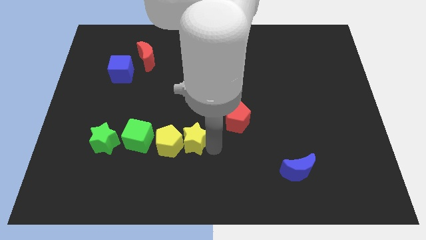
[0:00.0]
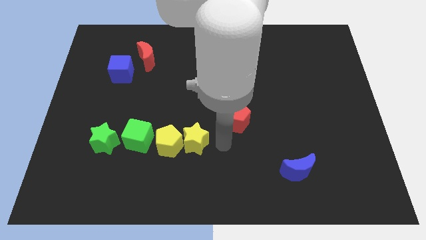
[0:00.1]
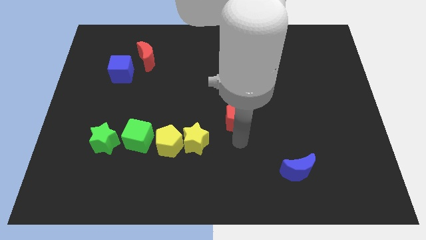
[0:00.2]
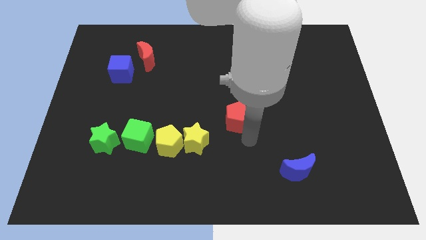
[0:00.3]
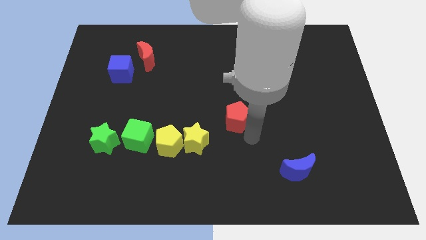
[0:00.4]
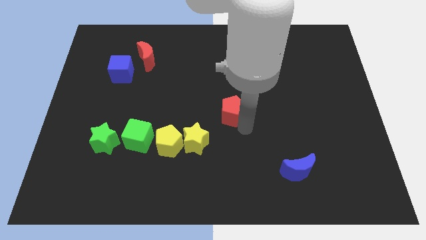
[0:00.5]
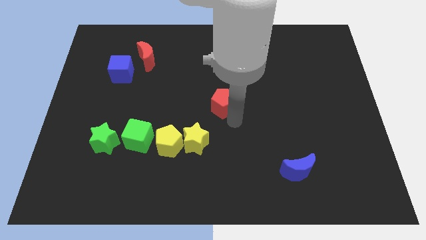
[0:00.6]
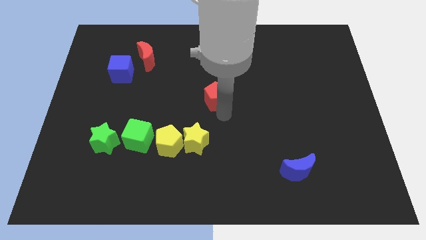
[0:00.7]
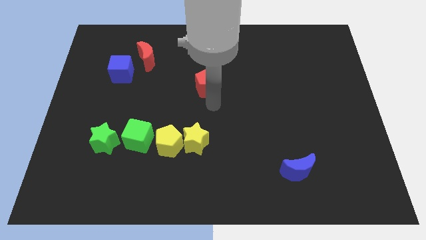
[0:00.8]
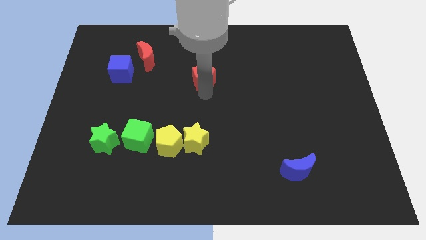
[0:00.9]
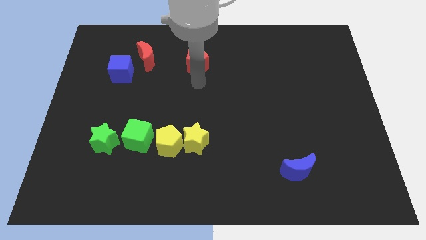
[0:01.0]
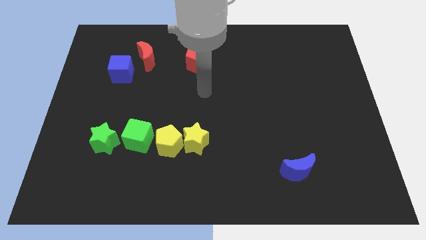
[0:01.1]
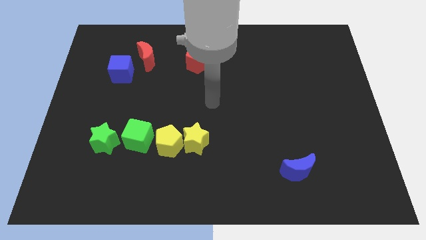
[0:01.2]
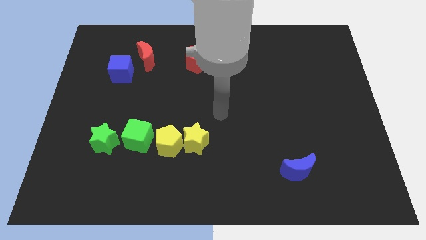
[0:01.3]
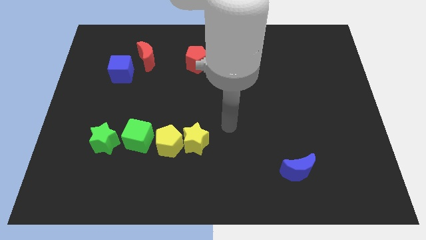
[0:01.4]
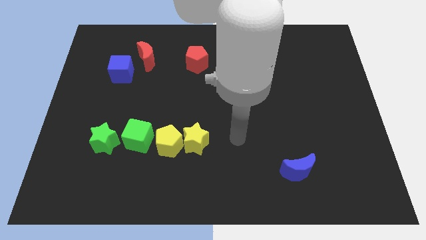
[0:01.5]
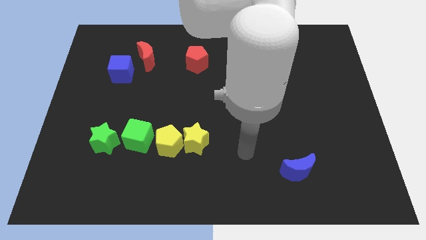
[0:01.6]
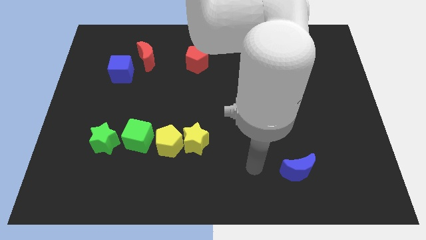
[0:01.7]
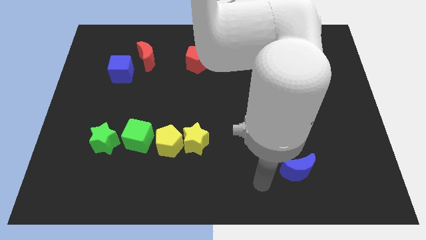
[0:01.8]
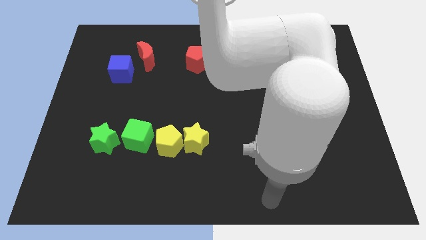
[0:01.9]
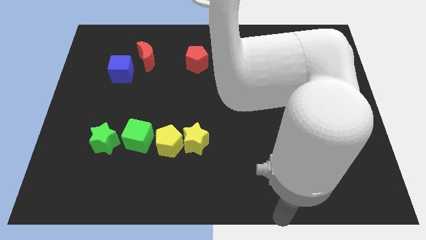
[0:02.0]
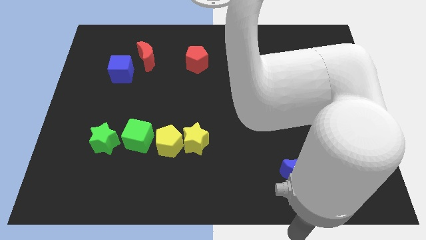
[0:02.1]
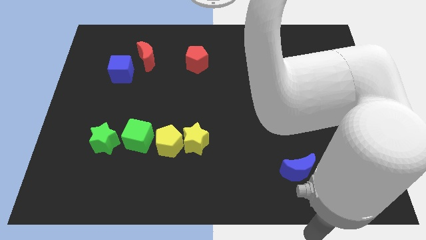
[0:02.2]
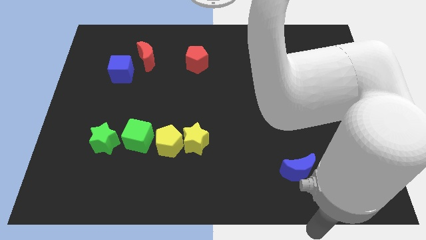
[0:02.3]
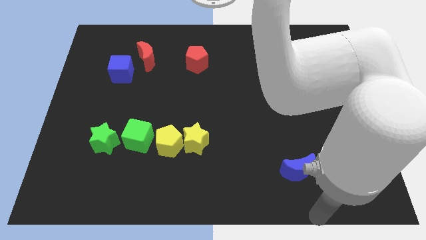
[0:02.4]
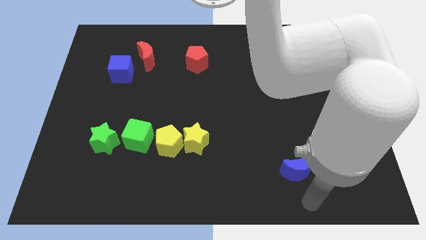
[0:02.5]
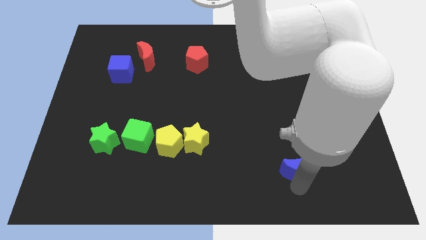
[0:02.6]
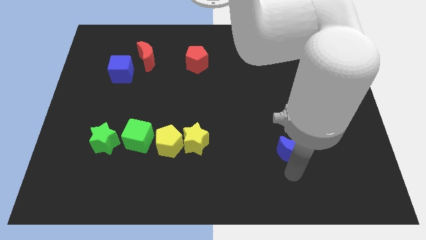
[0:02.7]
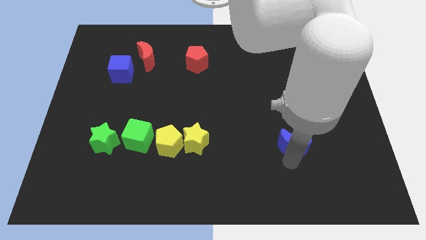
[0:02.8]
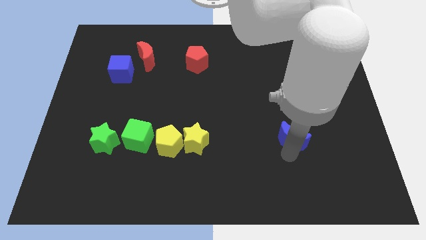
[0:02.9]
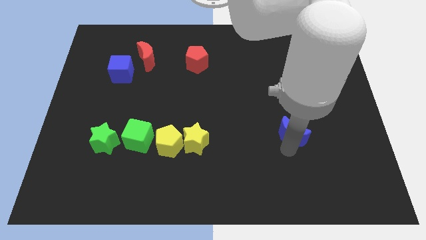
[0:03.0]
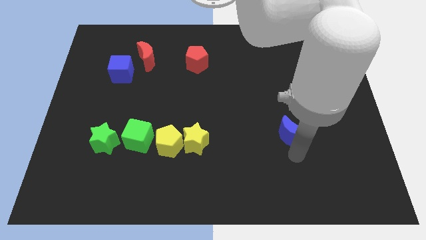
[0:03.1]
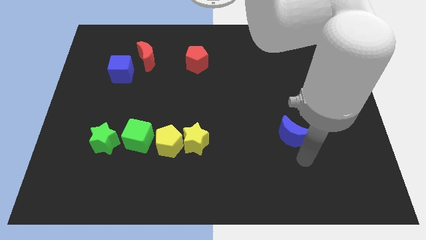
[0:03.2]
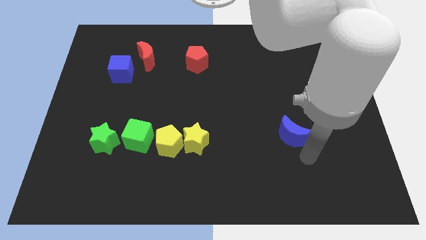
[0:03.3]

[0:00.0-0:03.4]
place the red pentagon and blue moon in a diagonal line

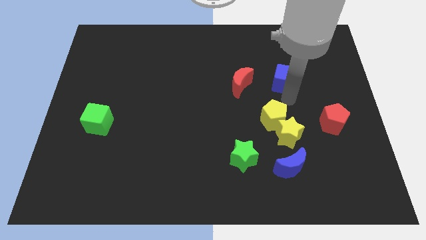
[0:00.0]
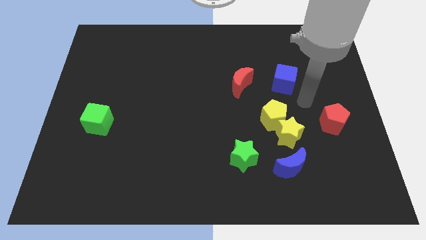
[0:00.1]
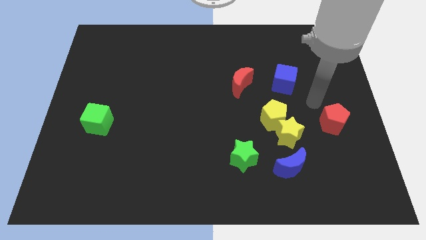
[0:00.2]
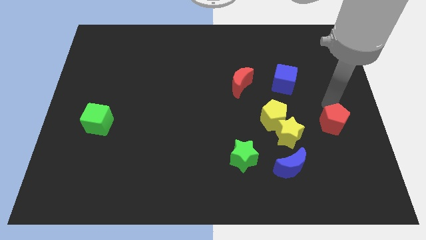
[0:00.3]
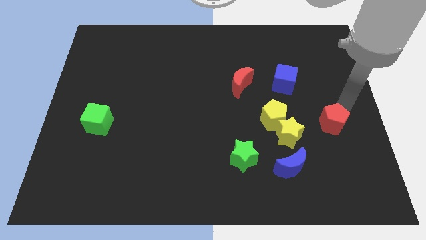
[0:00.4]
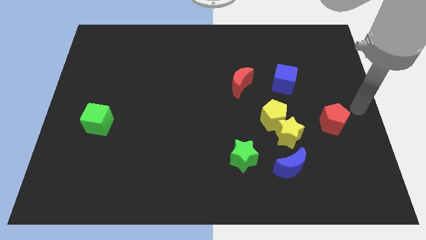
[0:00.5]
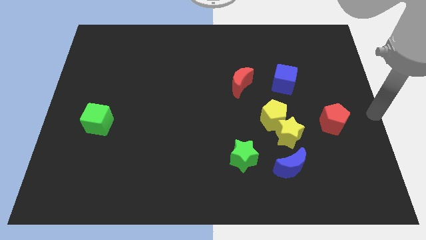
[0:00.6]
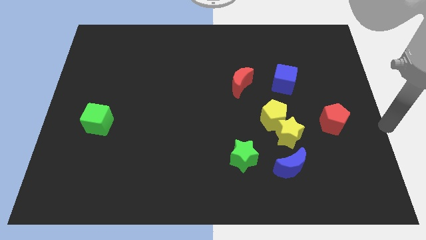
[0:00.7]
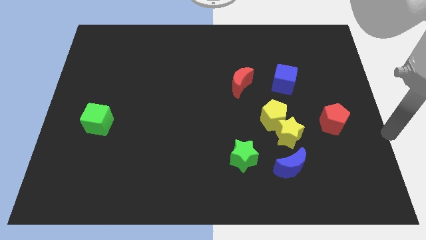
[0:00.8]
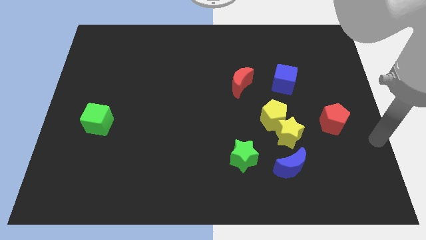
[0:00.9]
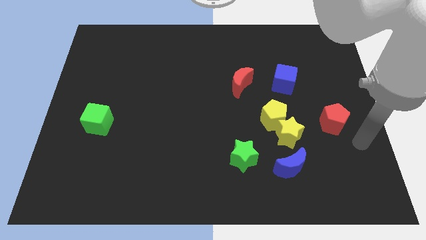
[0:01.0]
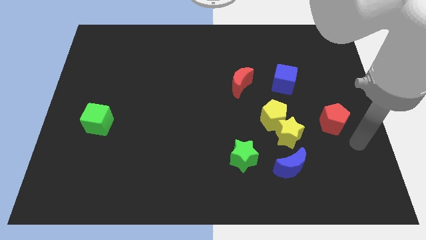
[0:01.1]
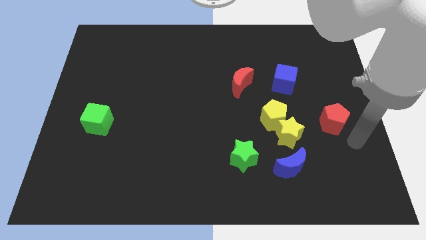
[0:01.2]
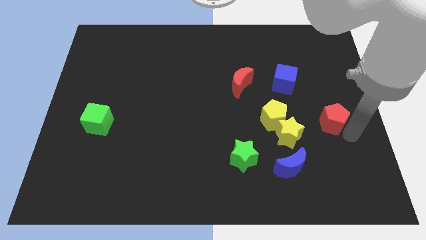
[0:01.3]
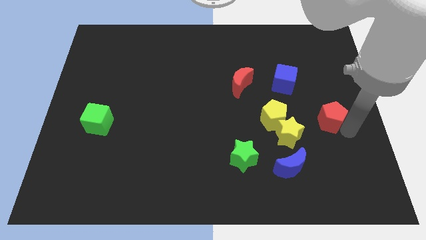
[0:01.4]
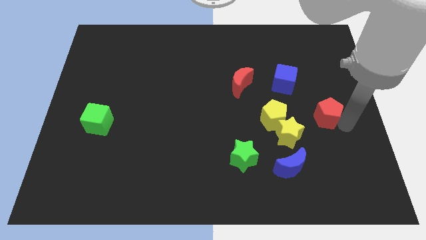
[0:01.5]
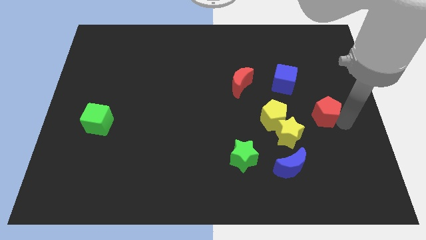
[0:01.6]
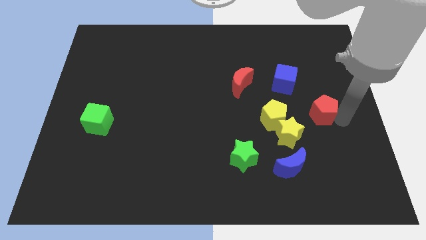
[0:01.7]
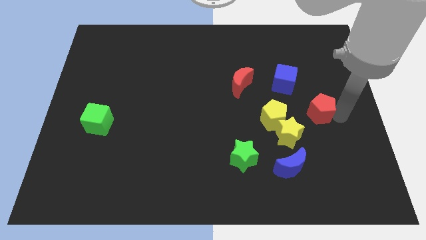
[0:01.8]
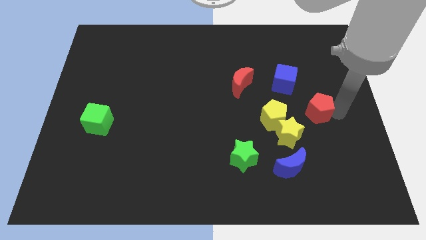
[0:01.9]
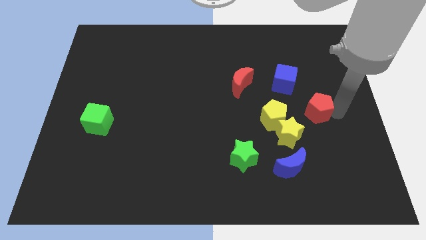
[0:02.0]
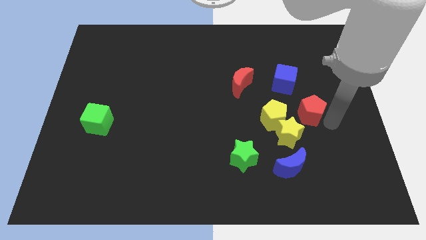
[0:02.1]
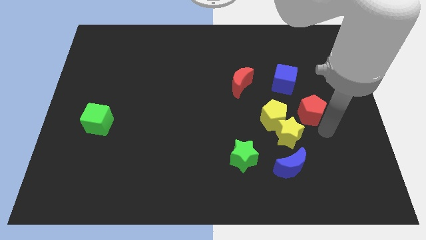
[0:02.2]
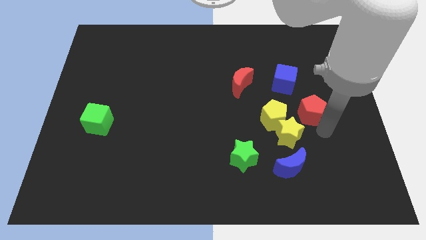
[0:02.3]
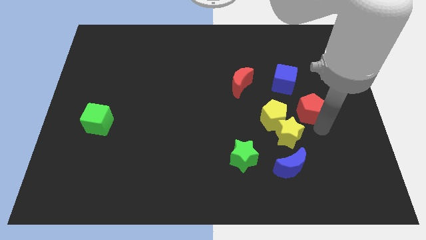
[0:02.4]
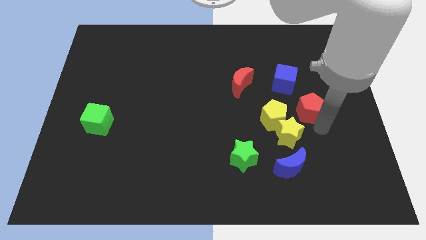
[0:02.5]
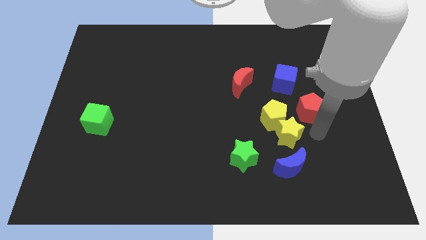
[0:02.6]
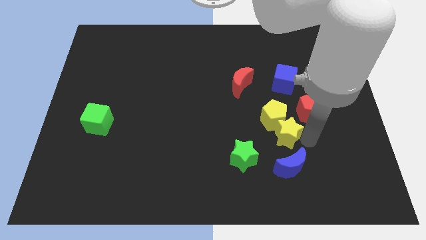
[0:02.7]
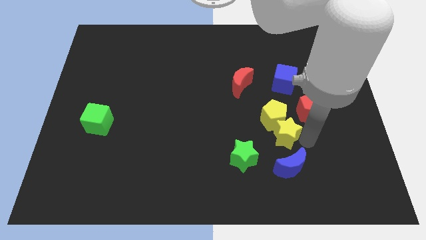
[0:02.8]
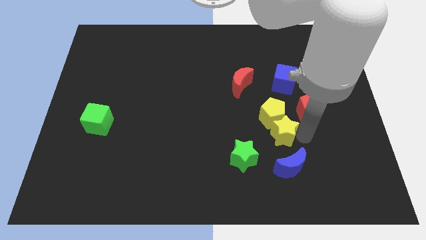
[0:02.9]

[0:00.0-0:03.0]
place the red pentagon to the right side of yellow blocks

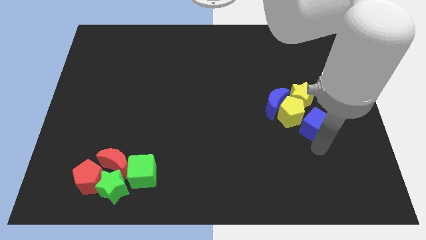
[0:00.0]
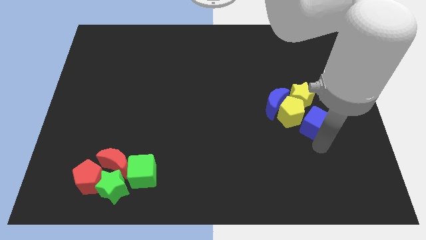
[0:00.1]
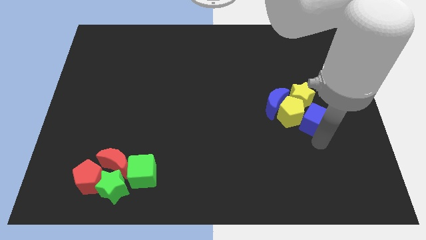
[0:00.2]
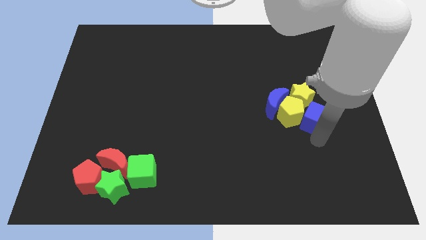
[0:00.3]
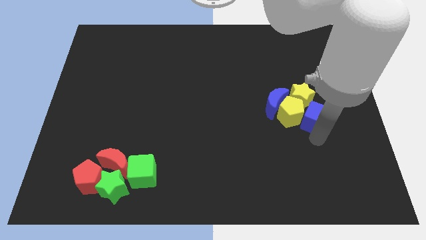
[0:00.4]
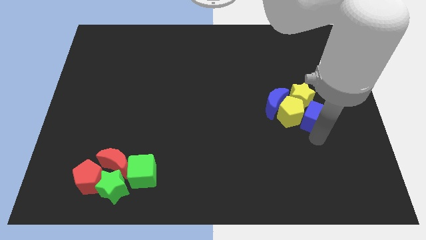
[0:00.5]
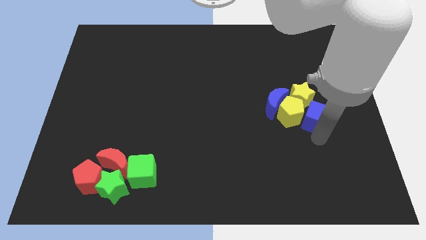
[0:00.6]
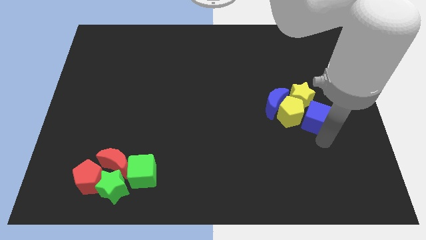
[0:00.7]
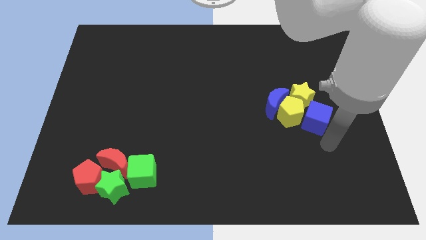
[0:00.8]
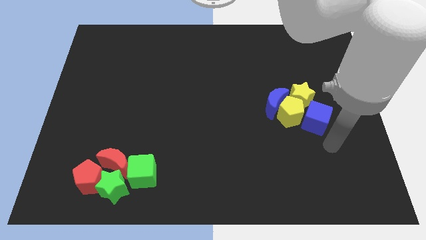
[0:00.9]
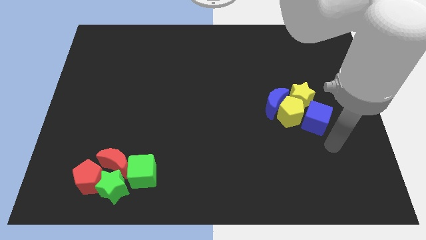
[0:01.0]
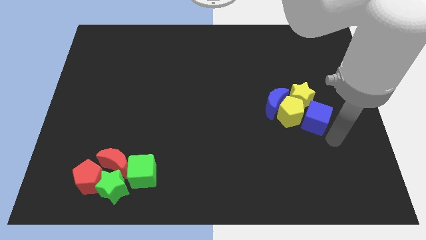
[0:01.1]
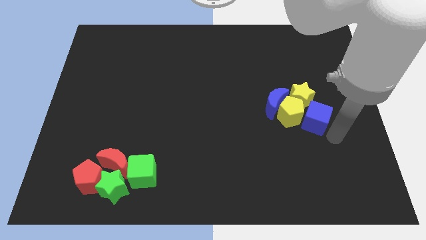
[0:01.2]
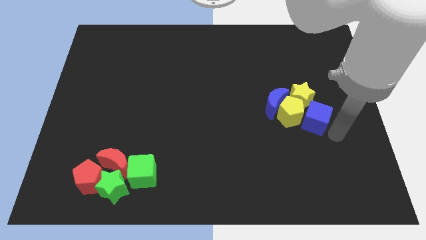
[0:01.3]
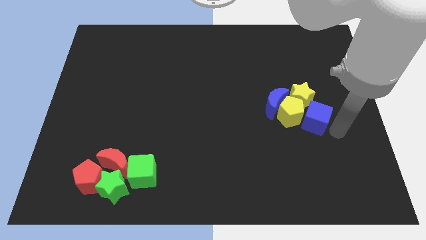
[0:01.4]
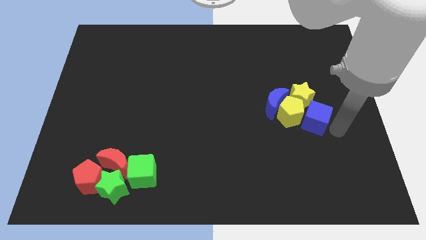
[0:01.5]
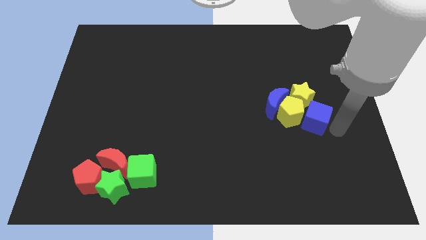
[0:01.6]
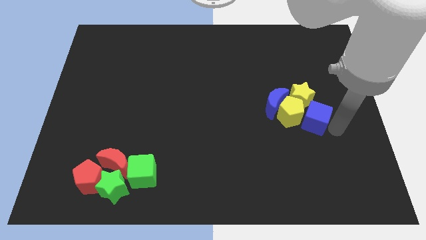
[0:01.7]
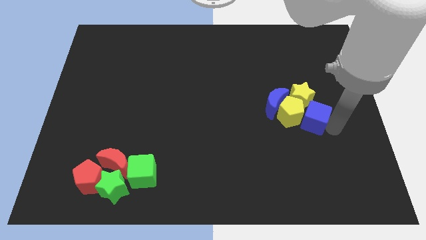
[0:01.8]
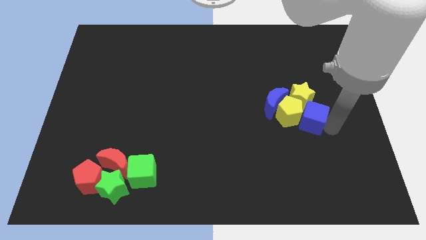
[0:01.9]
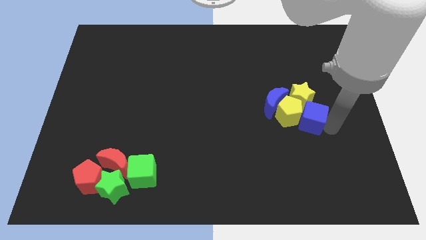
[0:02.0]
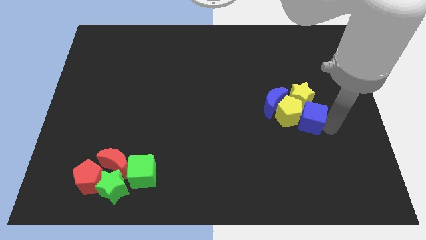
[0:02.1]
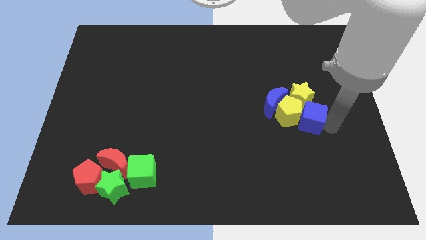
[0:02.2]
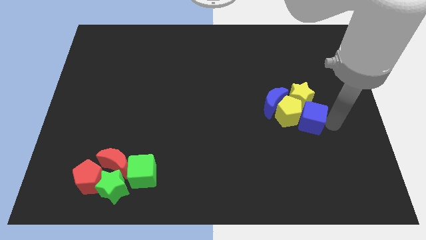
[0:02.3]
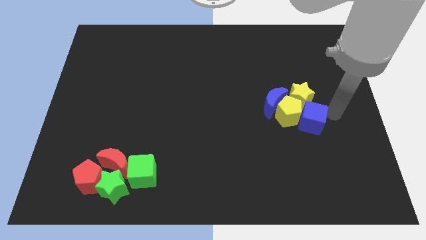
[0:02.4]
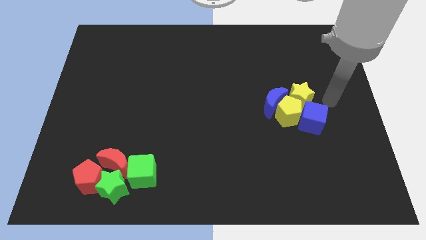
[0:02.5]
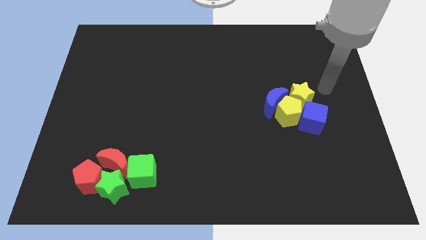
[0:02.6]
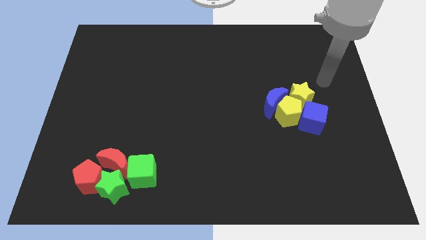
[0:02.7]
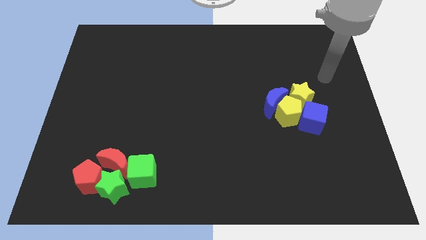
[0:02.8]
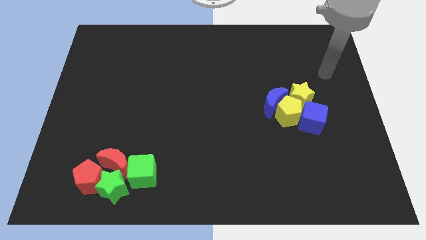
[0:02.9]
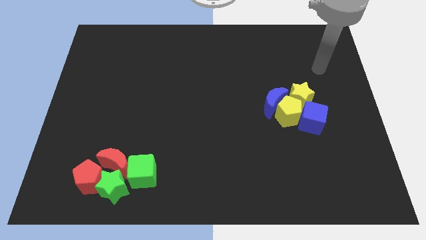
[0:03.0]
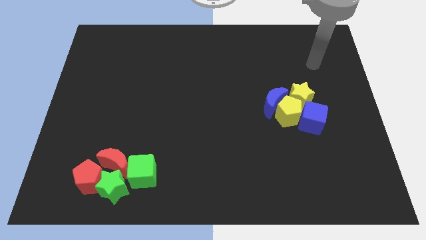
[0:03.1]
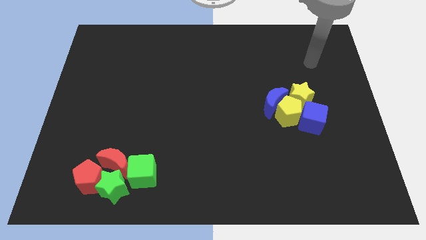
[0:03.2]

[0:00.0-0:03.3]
place the blue cube parallel right to the yellow pentagon
